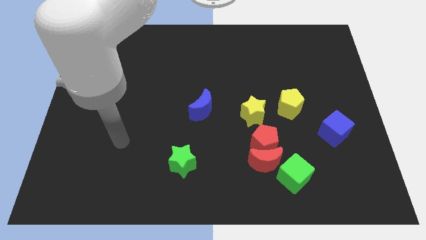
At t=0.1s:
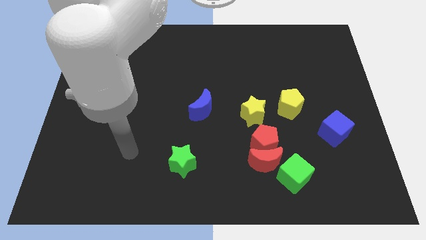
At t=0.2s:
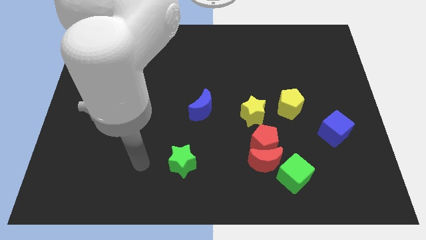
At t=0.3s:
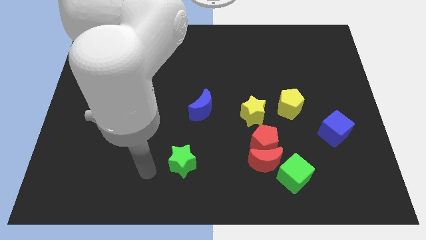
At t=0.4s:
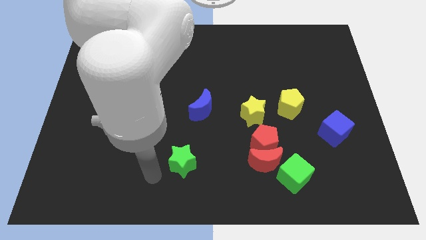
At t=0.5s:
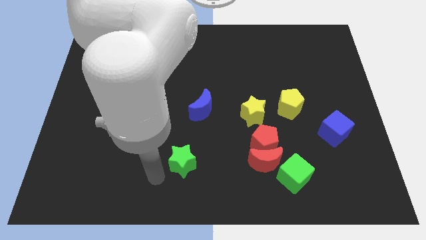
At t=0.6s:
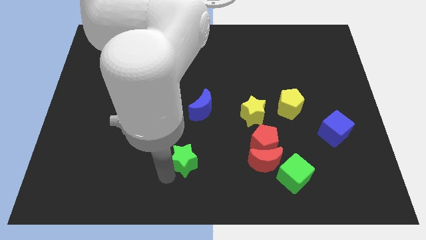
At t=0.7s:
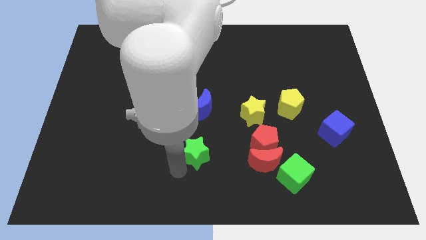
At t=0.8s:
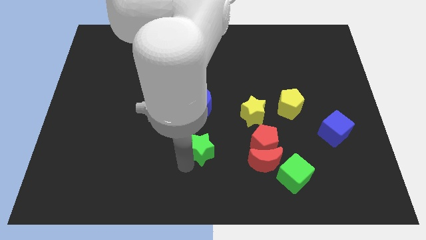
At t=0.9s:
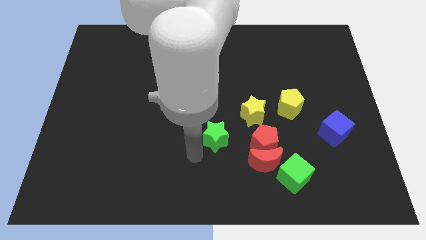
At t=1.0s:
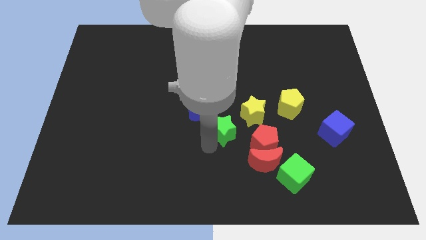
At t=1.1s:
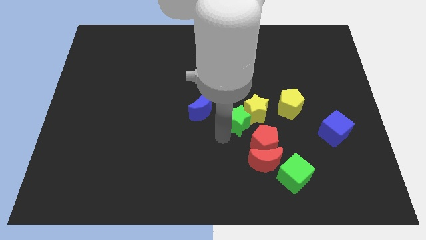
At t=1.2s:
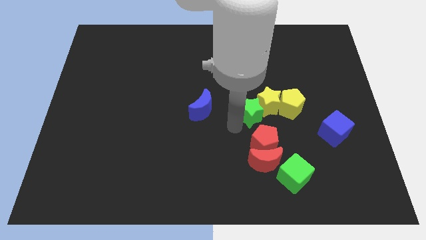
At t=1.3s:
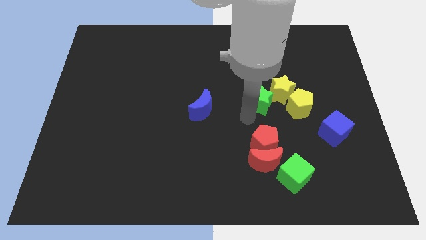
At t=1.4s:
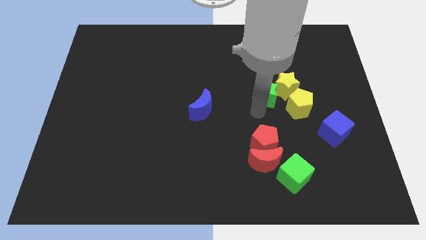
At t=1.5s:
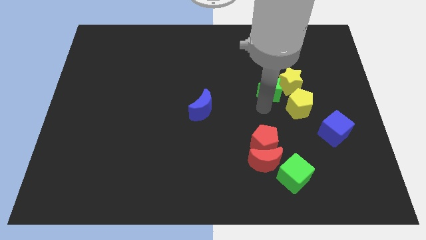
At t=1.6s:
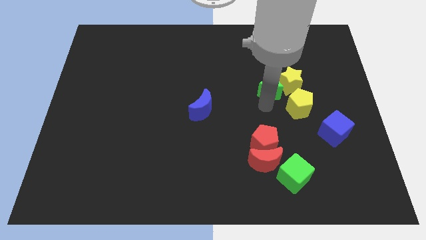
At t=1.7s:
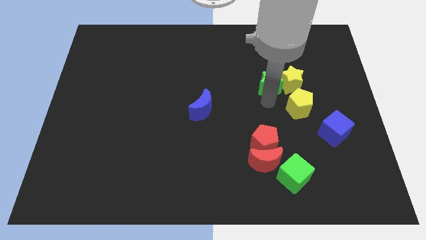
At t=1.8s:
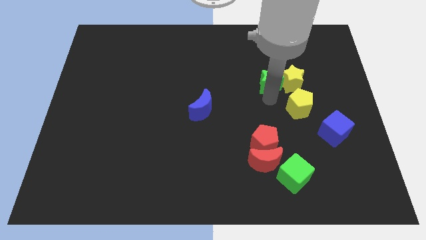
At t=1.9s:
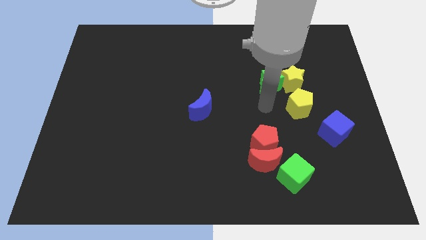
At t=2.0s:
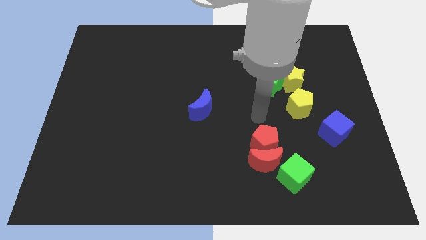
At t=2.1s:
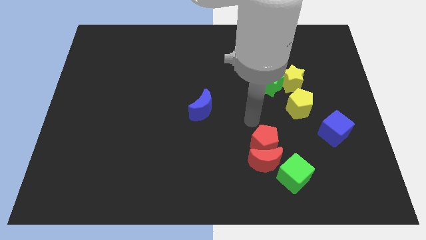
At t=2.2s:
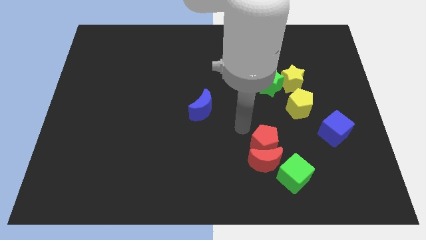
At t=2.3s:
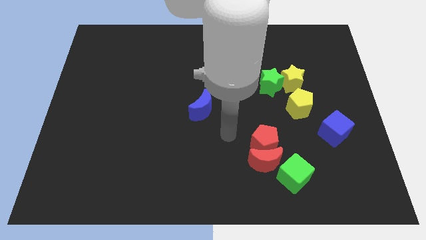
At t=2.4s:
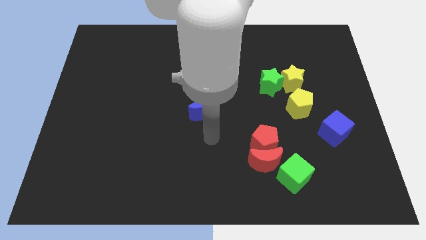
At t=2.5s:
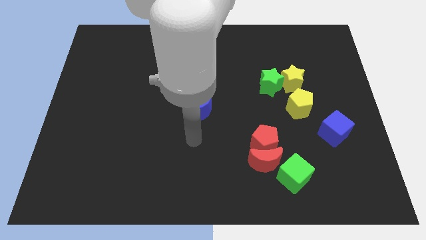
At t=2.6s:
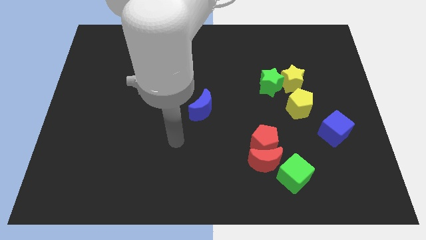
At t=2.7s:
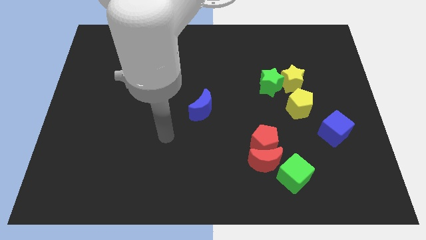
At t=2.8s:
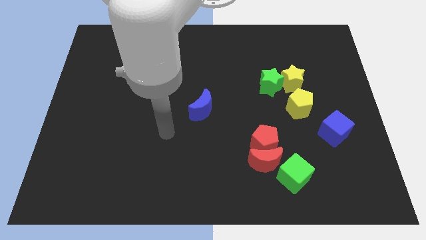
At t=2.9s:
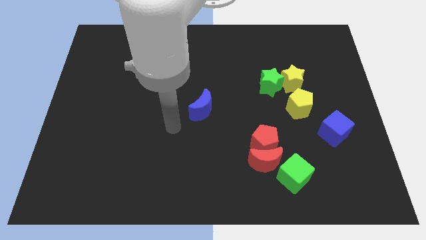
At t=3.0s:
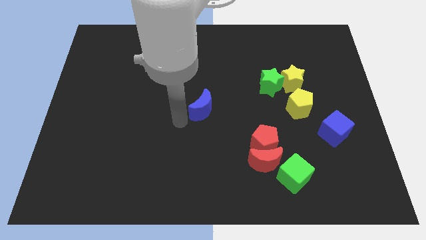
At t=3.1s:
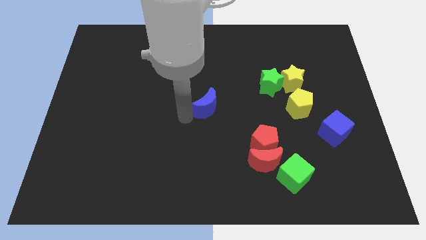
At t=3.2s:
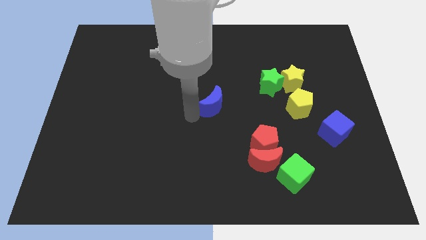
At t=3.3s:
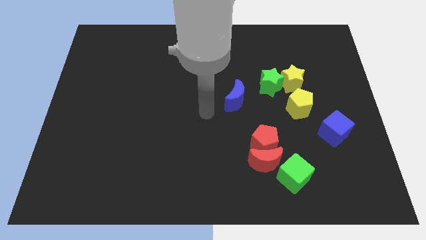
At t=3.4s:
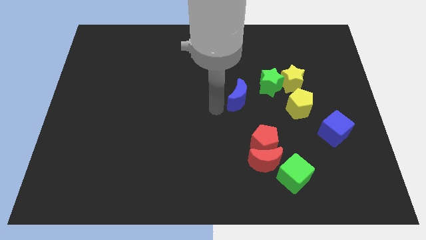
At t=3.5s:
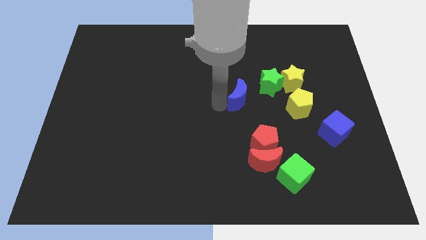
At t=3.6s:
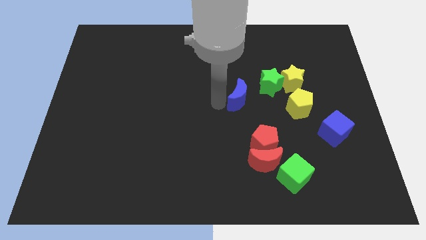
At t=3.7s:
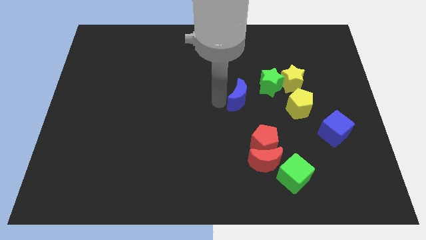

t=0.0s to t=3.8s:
place the blue moon diagonal to the red pentagon

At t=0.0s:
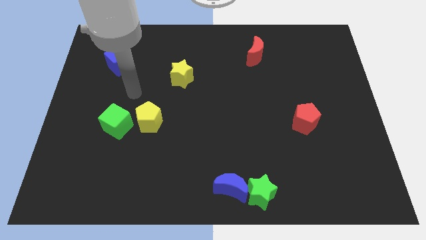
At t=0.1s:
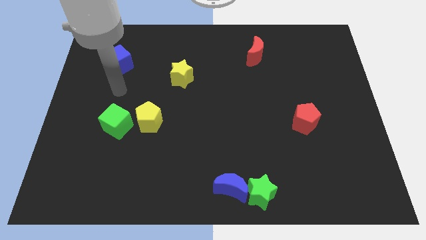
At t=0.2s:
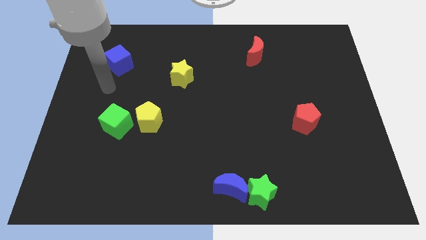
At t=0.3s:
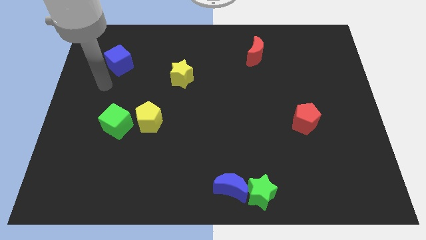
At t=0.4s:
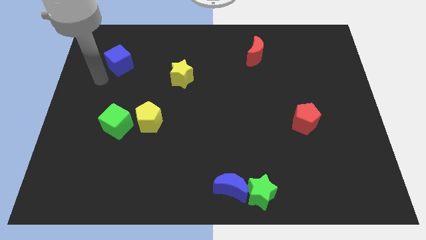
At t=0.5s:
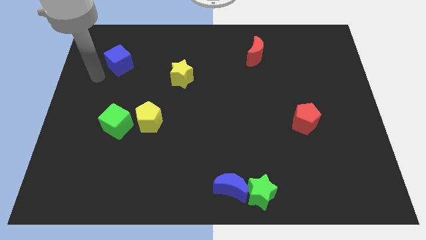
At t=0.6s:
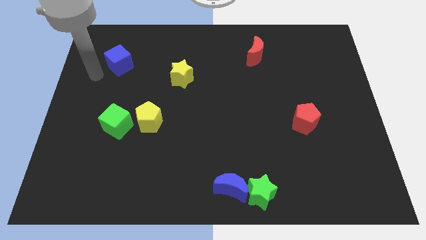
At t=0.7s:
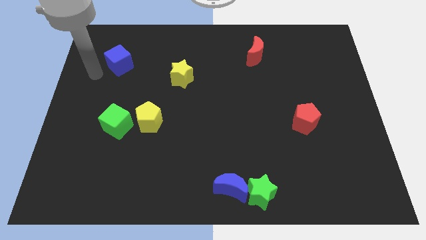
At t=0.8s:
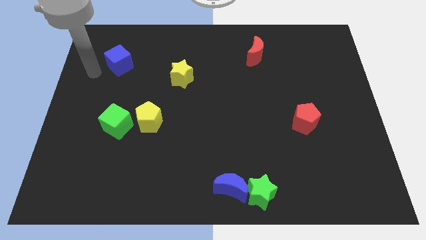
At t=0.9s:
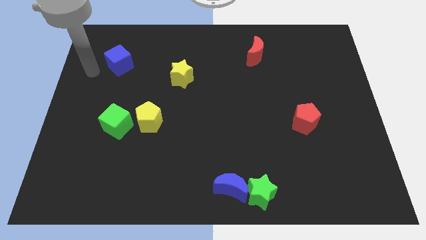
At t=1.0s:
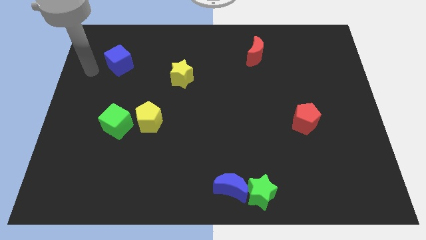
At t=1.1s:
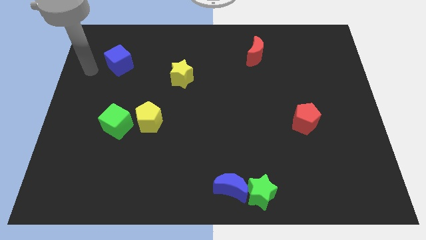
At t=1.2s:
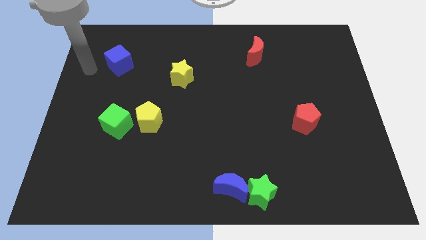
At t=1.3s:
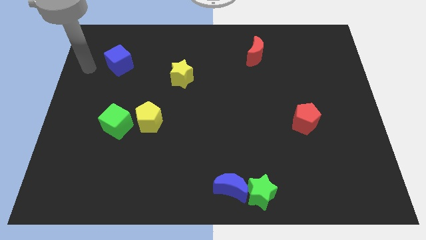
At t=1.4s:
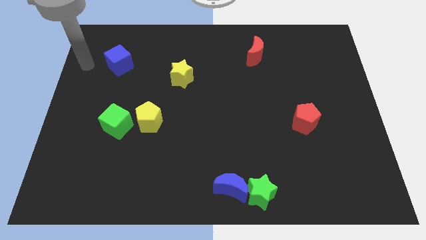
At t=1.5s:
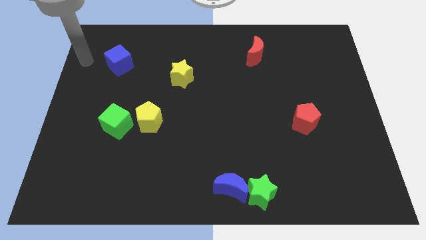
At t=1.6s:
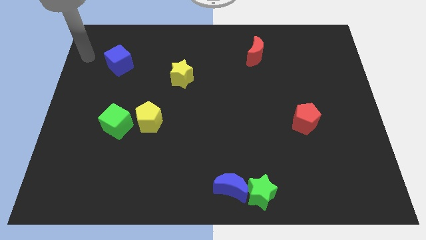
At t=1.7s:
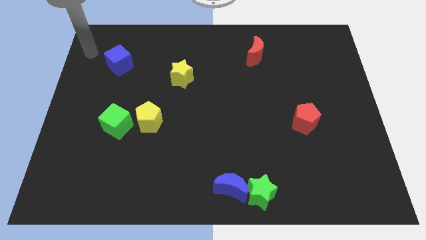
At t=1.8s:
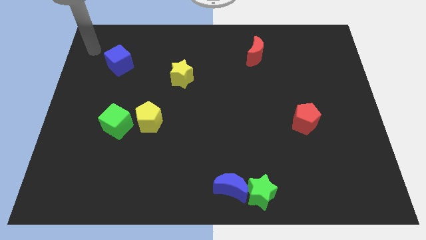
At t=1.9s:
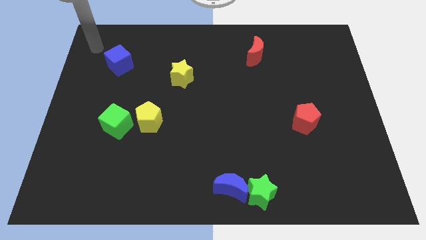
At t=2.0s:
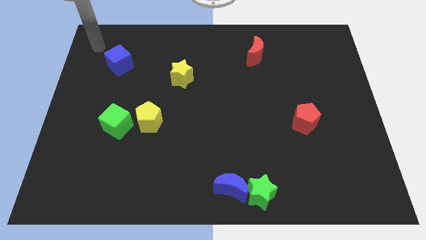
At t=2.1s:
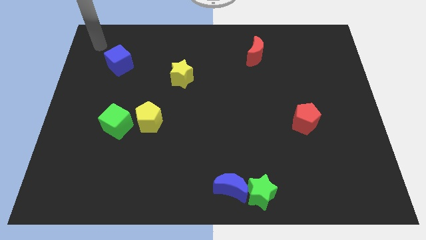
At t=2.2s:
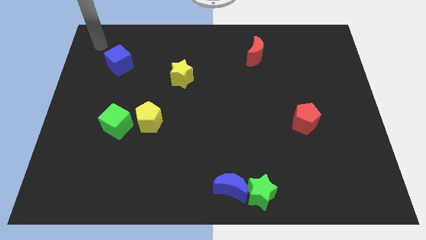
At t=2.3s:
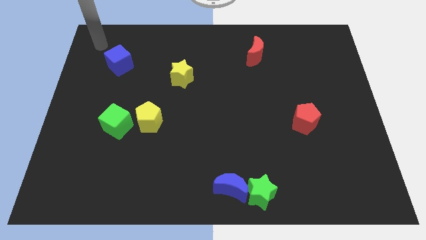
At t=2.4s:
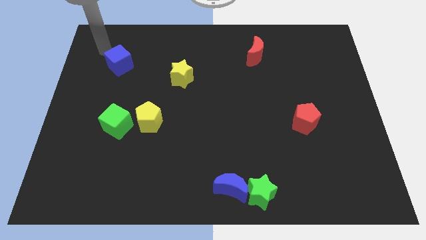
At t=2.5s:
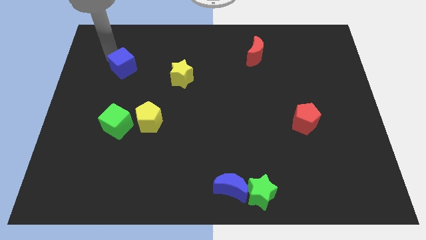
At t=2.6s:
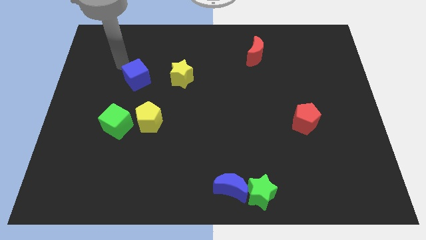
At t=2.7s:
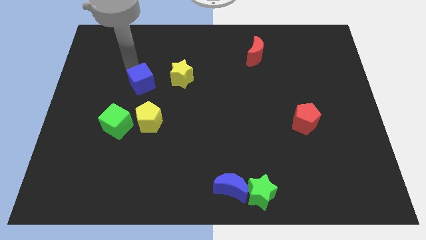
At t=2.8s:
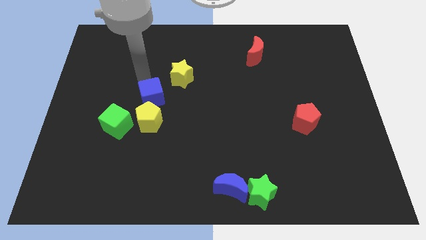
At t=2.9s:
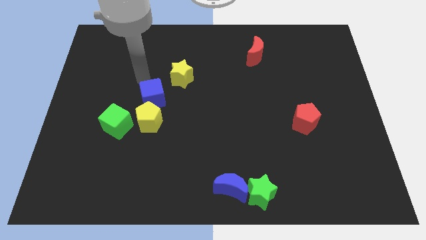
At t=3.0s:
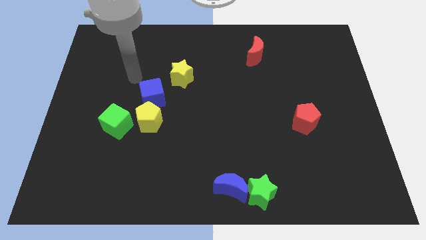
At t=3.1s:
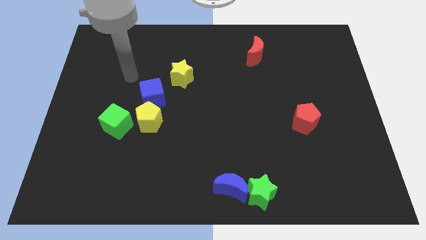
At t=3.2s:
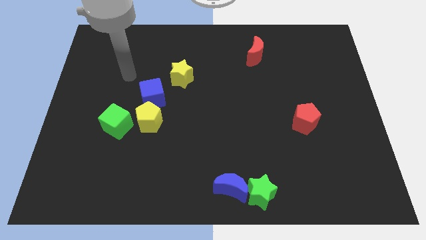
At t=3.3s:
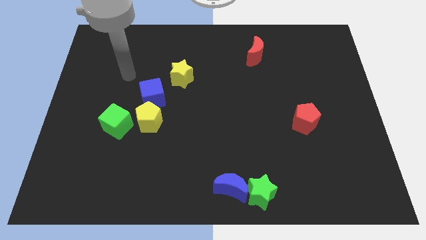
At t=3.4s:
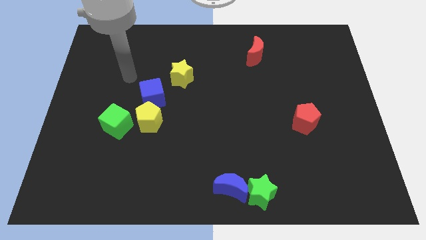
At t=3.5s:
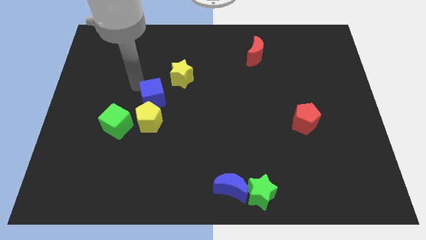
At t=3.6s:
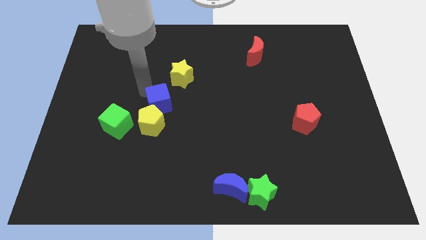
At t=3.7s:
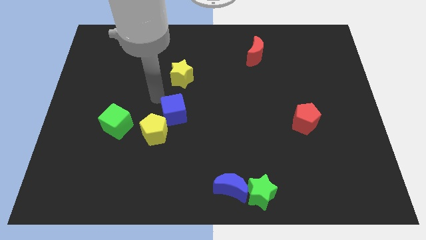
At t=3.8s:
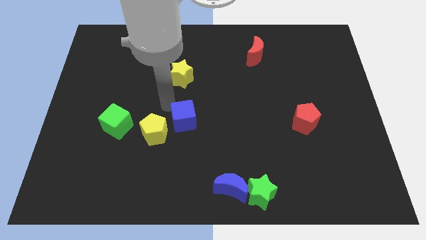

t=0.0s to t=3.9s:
push the blue cube into the yellow pentagon

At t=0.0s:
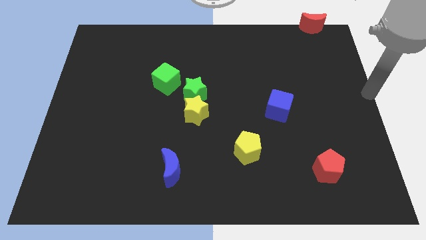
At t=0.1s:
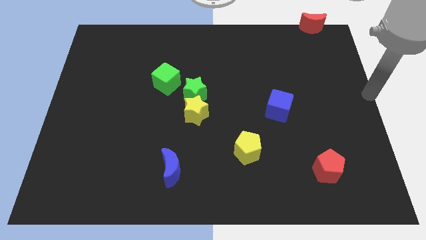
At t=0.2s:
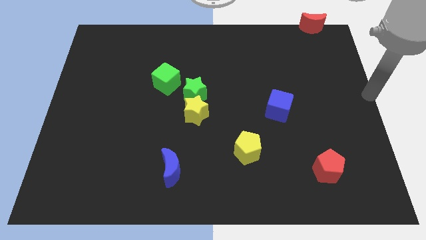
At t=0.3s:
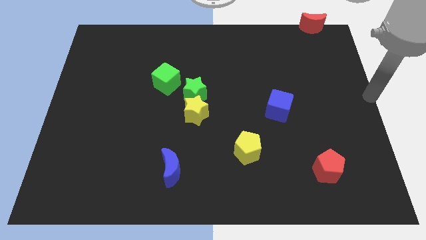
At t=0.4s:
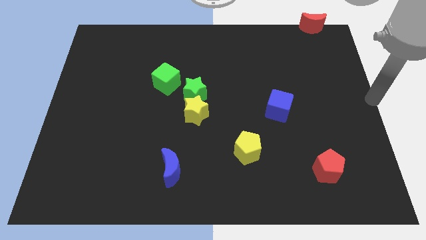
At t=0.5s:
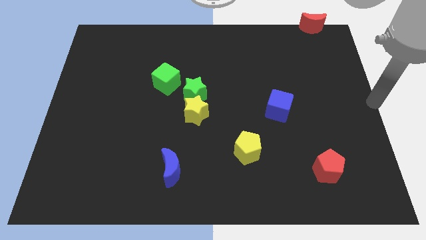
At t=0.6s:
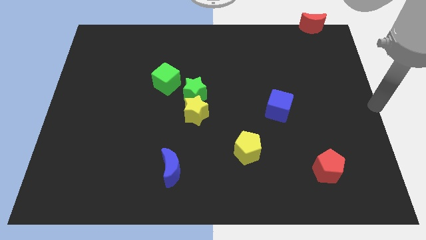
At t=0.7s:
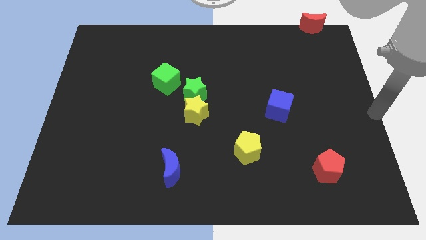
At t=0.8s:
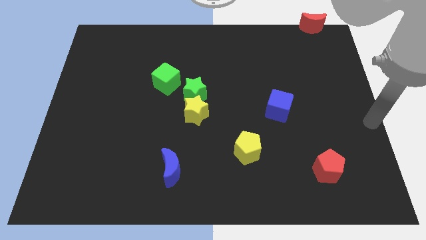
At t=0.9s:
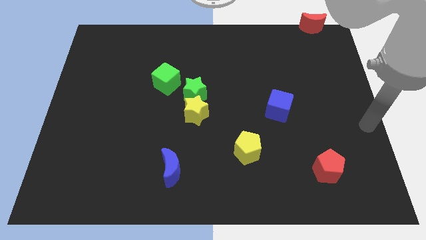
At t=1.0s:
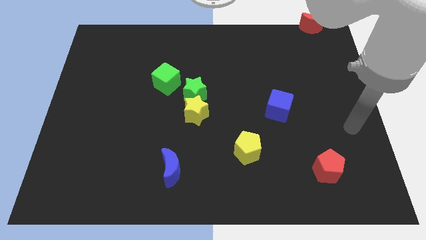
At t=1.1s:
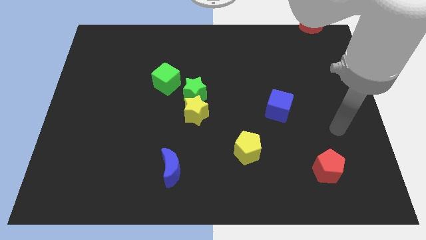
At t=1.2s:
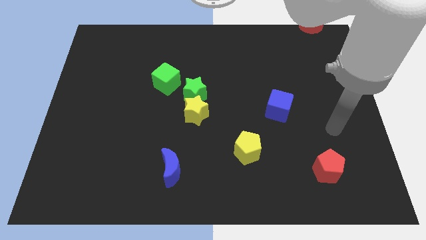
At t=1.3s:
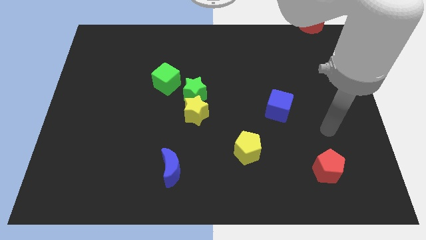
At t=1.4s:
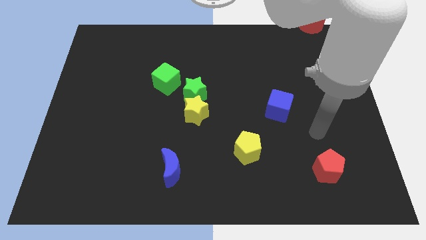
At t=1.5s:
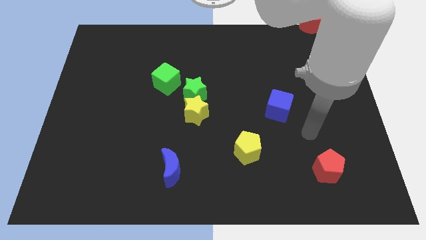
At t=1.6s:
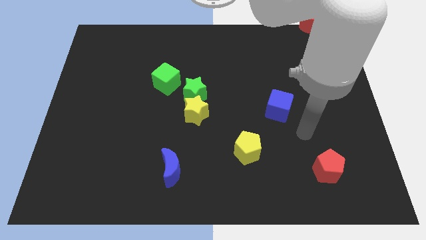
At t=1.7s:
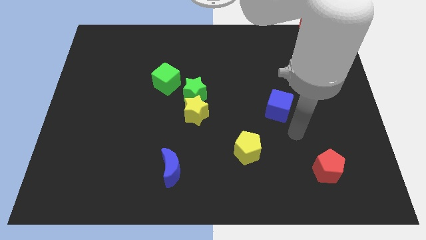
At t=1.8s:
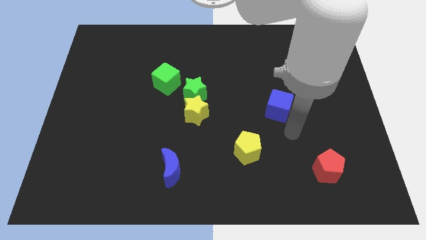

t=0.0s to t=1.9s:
place pointer near the blue cube
